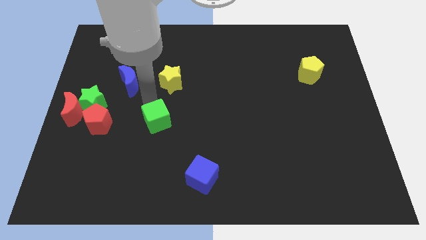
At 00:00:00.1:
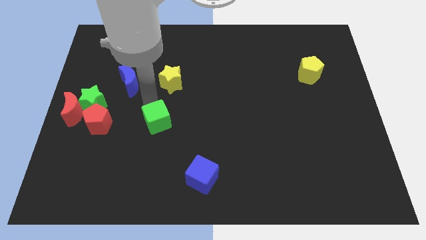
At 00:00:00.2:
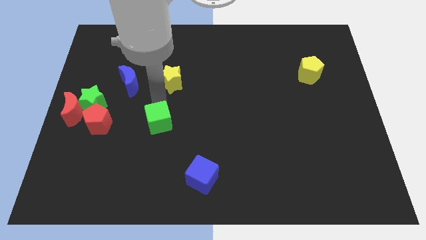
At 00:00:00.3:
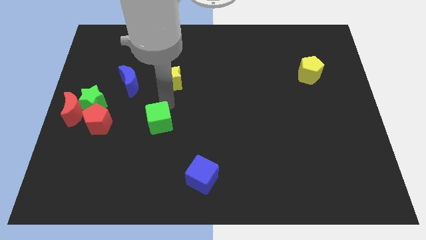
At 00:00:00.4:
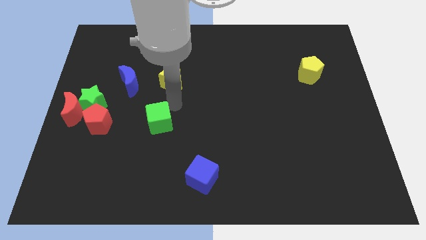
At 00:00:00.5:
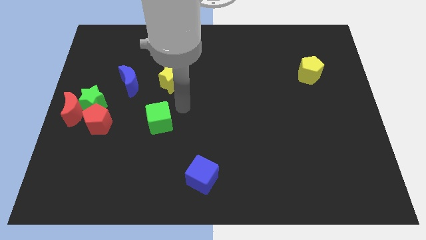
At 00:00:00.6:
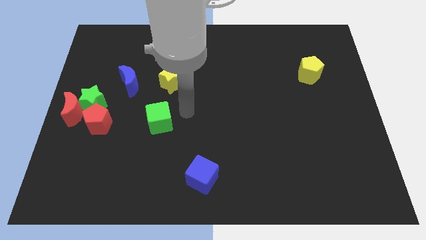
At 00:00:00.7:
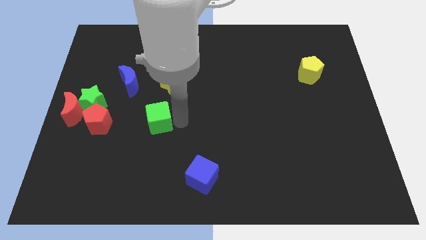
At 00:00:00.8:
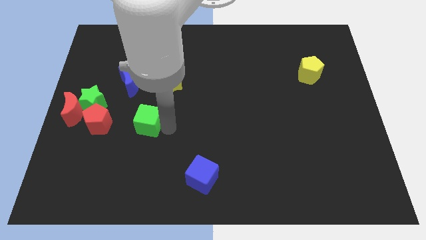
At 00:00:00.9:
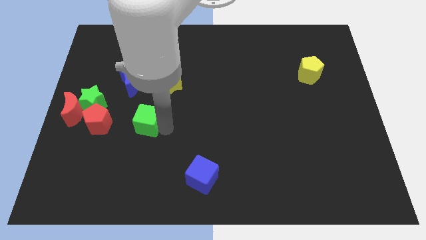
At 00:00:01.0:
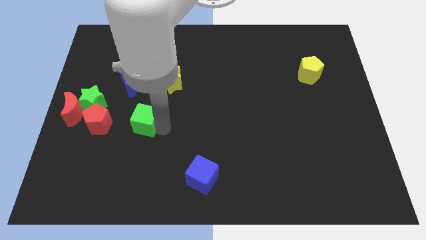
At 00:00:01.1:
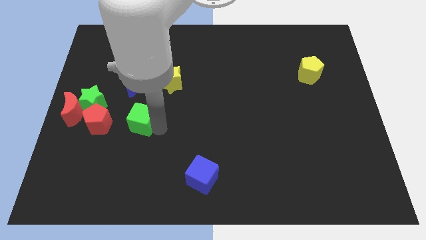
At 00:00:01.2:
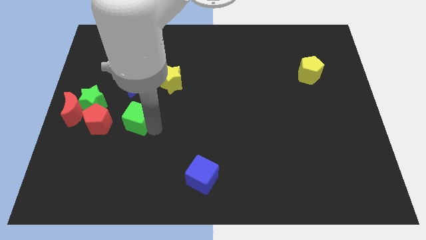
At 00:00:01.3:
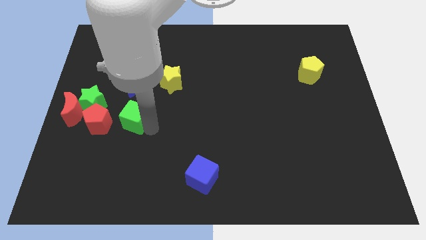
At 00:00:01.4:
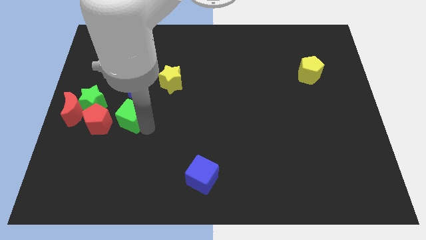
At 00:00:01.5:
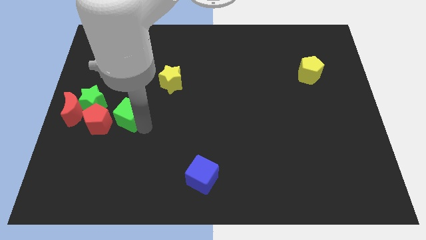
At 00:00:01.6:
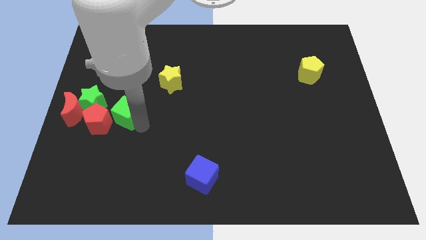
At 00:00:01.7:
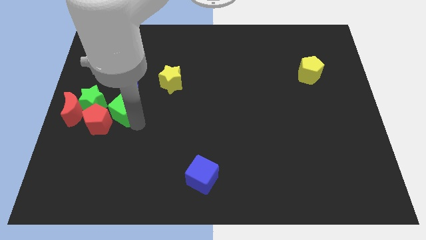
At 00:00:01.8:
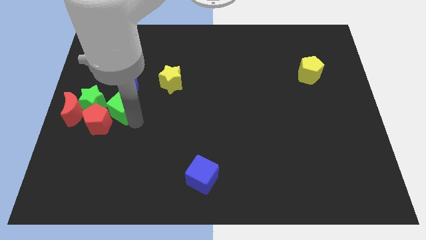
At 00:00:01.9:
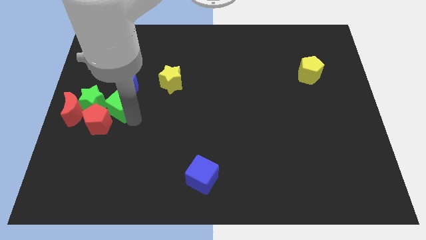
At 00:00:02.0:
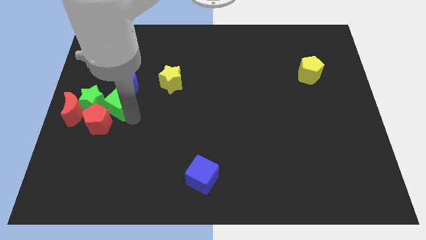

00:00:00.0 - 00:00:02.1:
place green cube to the right of green star

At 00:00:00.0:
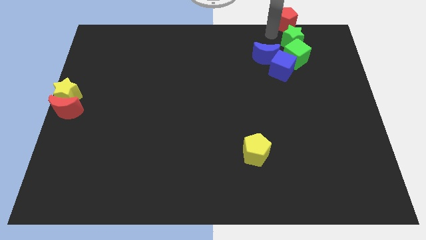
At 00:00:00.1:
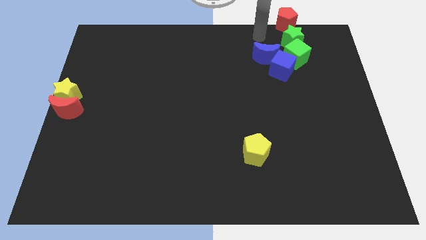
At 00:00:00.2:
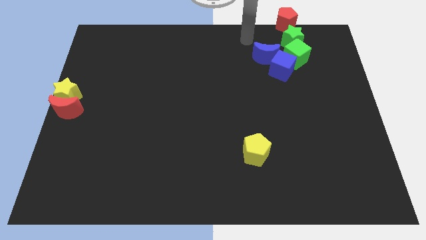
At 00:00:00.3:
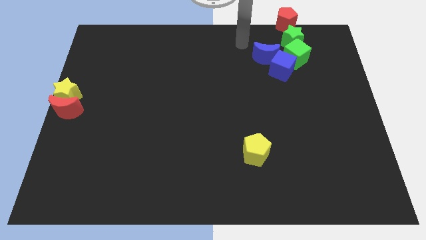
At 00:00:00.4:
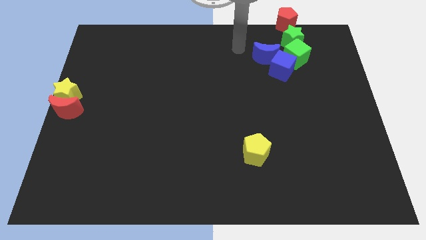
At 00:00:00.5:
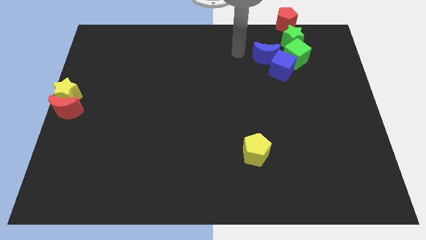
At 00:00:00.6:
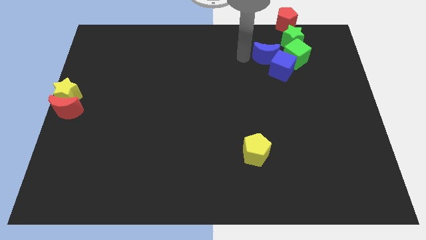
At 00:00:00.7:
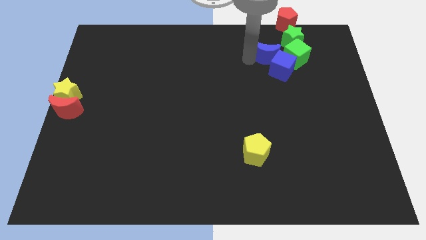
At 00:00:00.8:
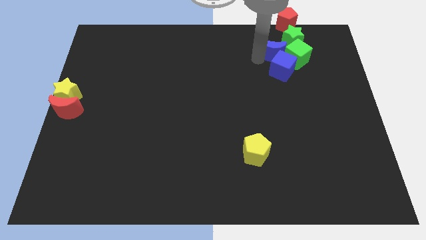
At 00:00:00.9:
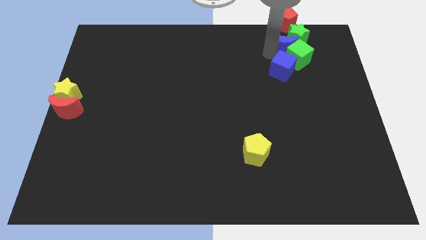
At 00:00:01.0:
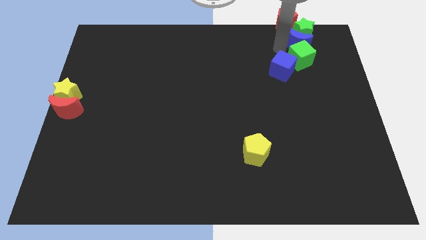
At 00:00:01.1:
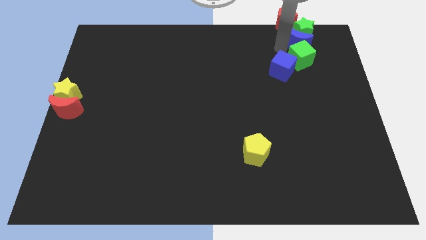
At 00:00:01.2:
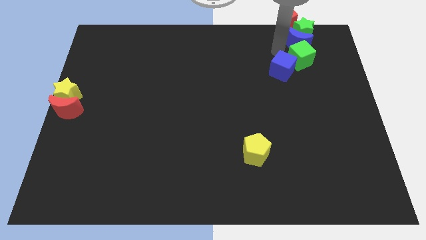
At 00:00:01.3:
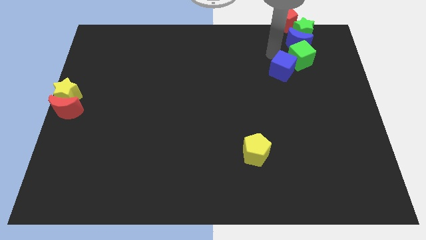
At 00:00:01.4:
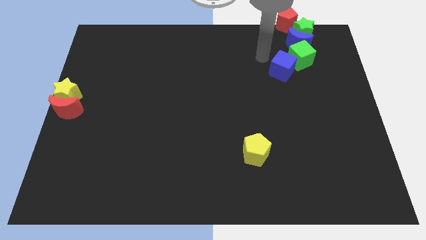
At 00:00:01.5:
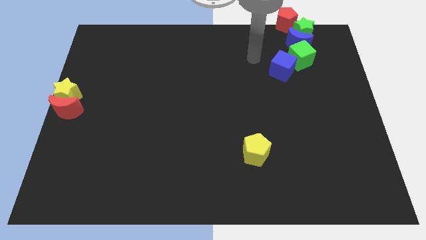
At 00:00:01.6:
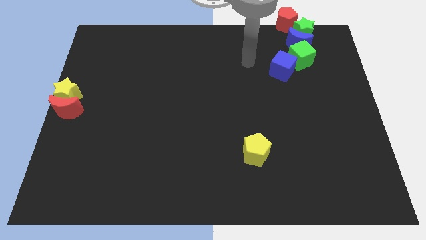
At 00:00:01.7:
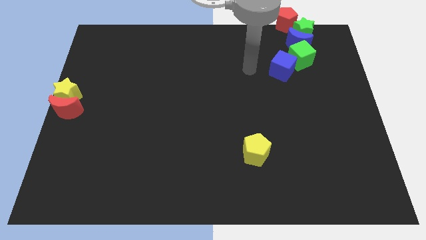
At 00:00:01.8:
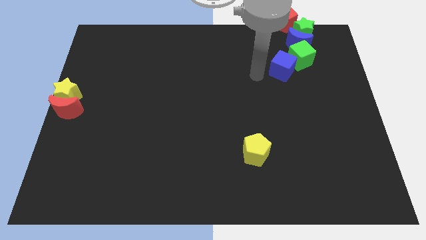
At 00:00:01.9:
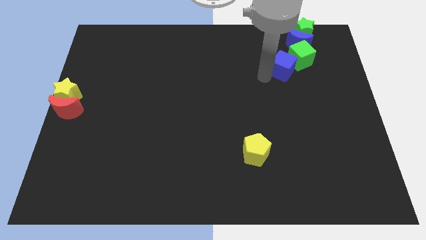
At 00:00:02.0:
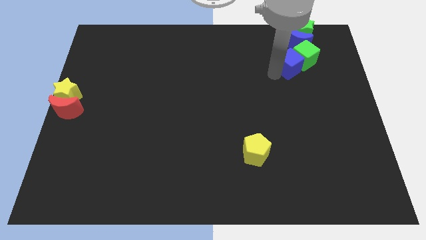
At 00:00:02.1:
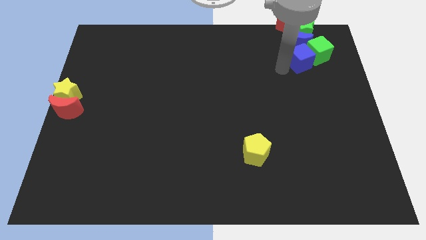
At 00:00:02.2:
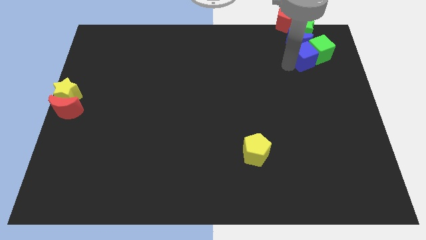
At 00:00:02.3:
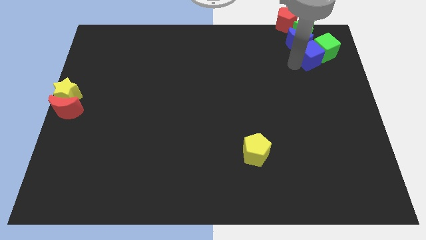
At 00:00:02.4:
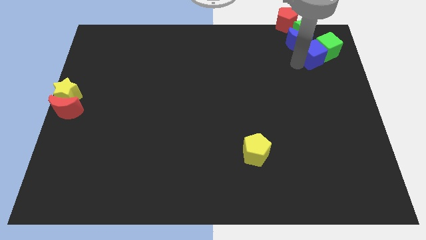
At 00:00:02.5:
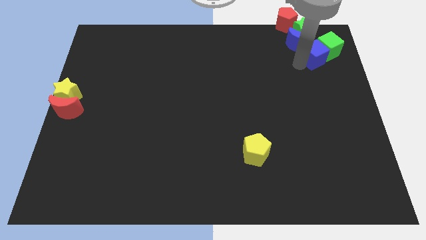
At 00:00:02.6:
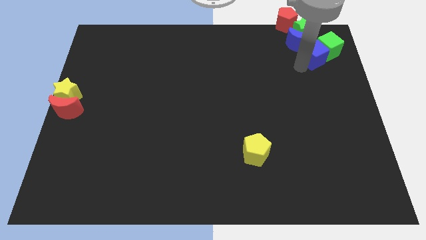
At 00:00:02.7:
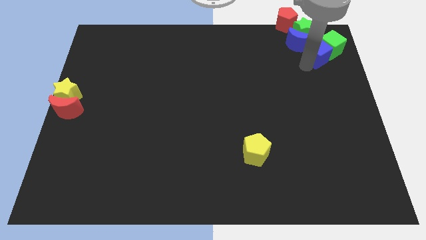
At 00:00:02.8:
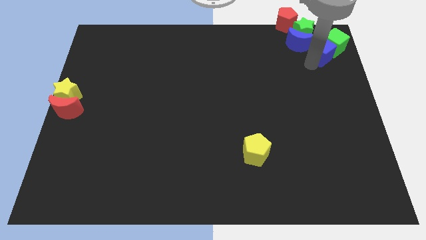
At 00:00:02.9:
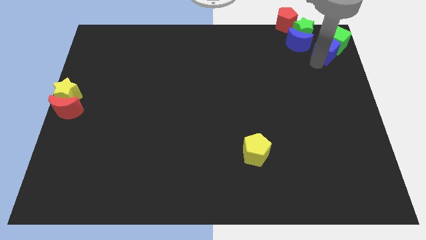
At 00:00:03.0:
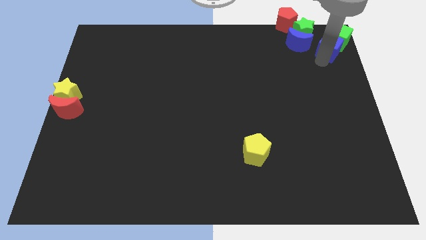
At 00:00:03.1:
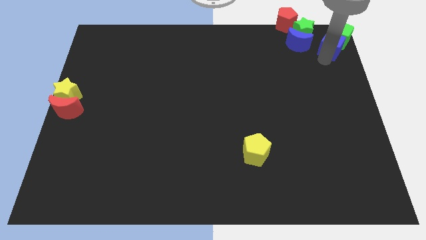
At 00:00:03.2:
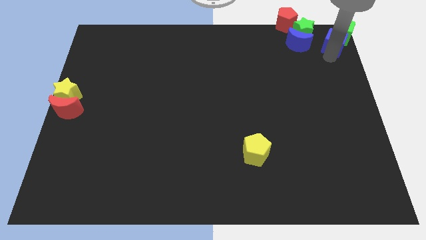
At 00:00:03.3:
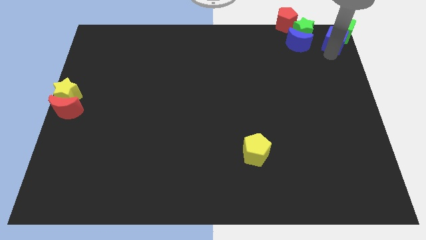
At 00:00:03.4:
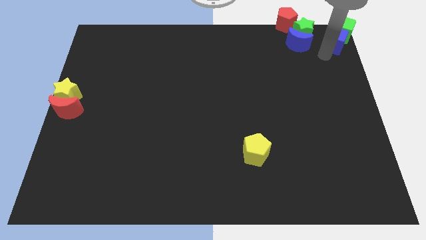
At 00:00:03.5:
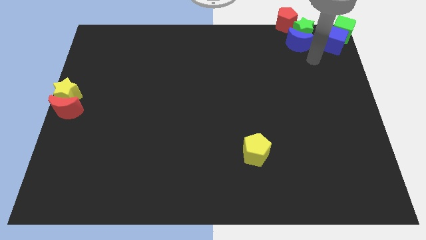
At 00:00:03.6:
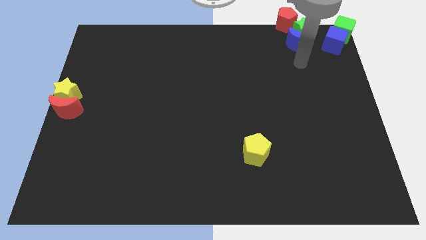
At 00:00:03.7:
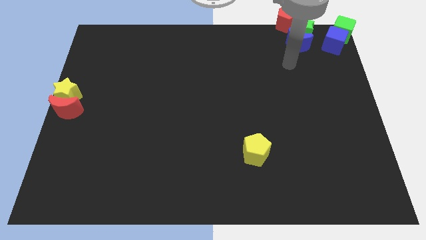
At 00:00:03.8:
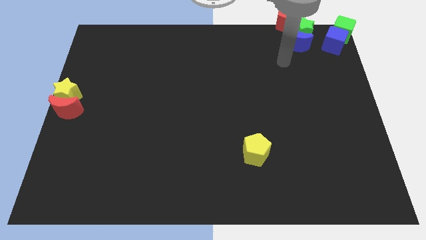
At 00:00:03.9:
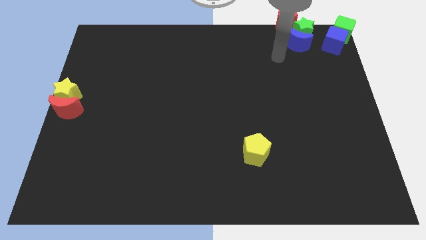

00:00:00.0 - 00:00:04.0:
push the blue crescent into the green star

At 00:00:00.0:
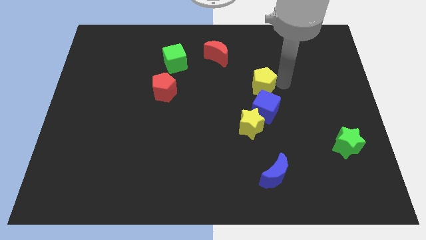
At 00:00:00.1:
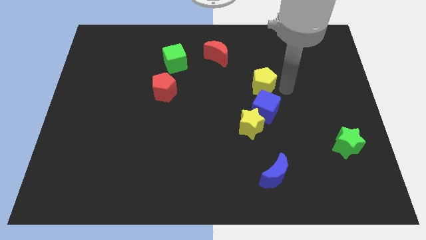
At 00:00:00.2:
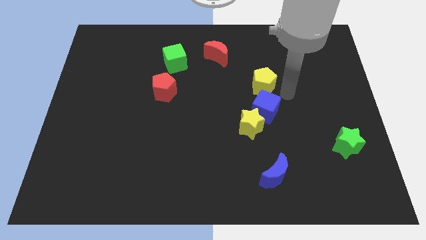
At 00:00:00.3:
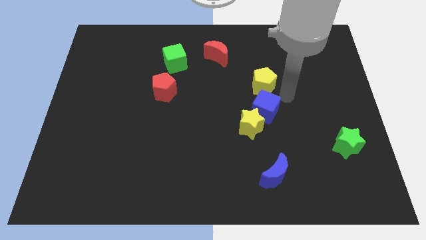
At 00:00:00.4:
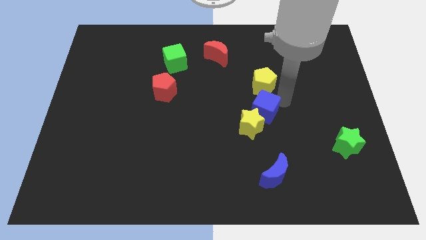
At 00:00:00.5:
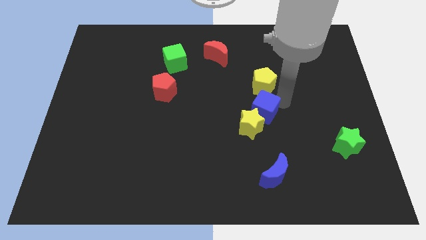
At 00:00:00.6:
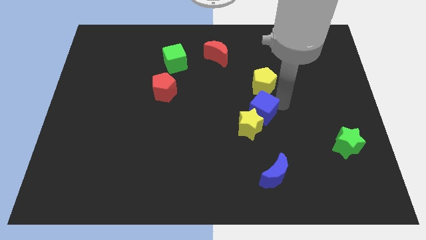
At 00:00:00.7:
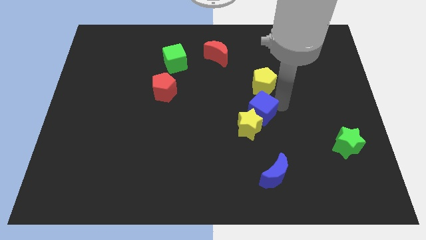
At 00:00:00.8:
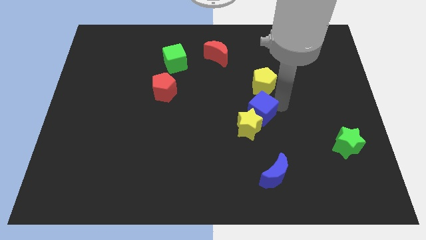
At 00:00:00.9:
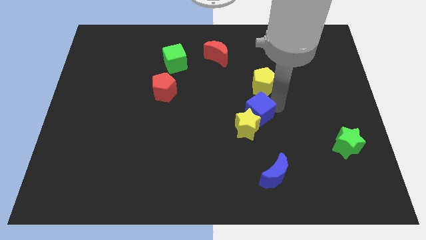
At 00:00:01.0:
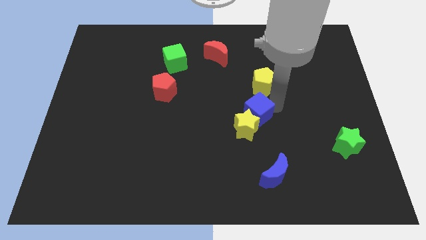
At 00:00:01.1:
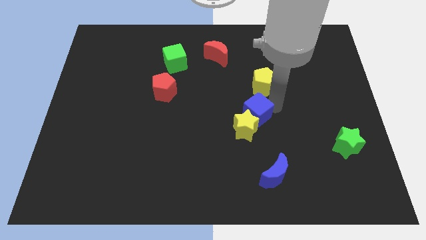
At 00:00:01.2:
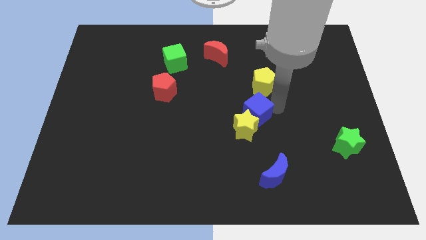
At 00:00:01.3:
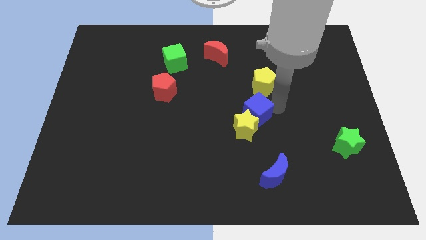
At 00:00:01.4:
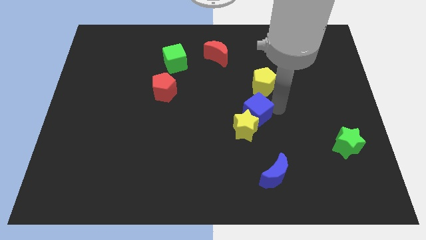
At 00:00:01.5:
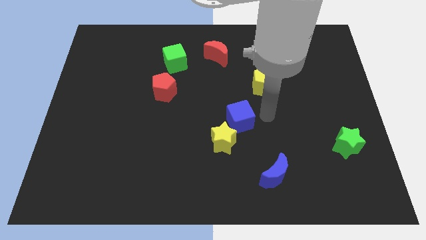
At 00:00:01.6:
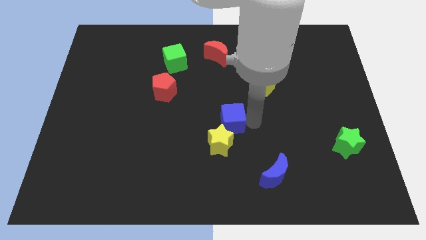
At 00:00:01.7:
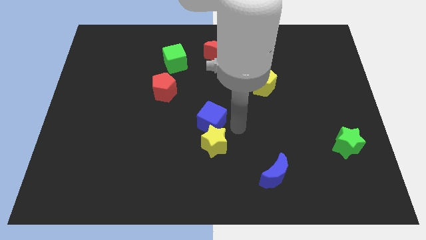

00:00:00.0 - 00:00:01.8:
push the blue cube to the center of the board

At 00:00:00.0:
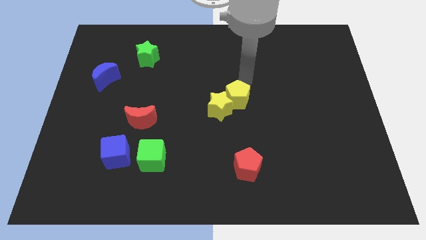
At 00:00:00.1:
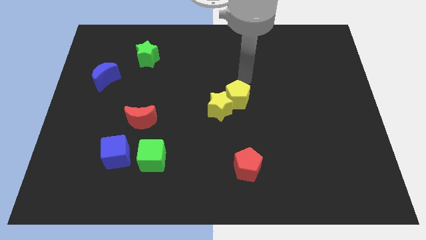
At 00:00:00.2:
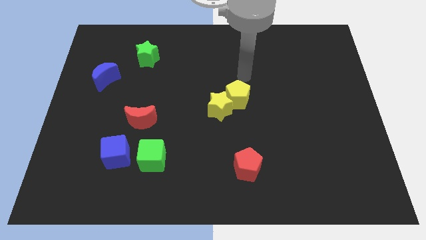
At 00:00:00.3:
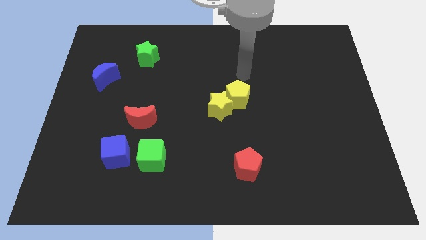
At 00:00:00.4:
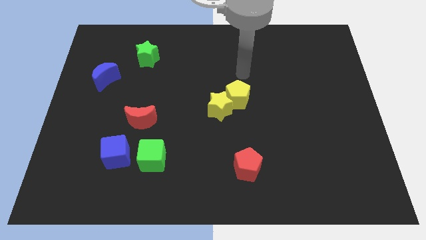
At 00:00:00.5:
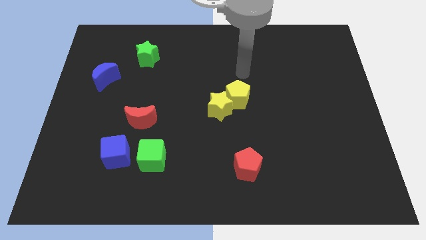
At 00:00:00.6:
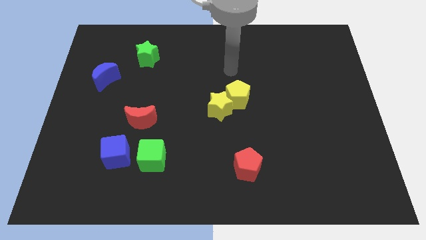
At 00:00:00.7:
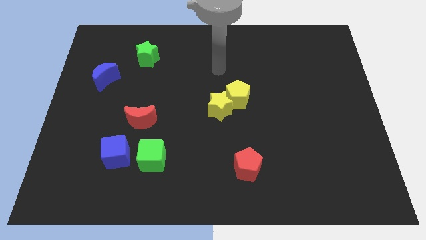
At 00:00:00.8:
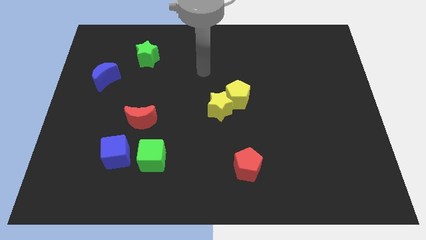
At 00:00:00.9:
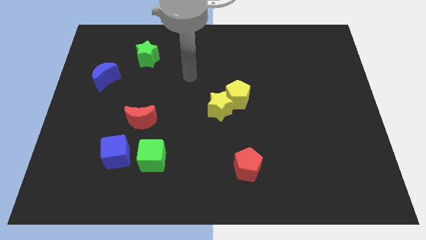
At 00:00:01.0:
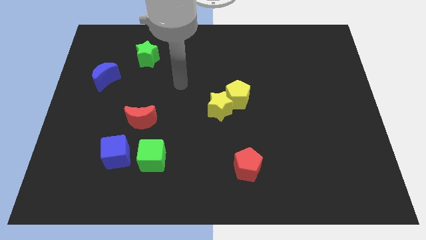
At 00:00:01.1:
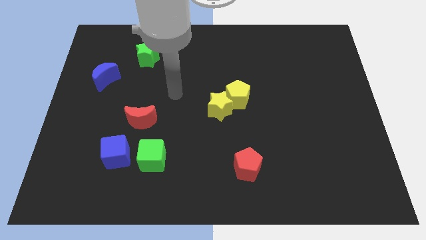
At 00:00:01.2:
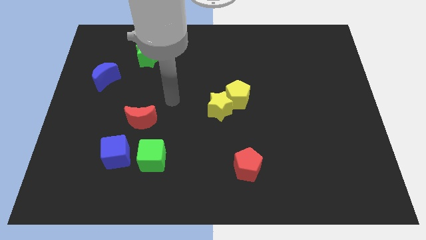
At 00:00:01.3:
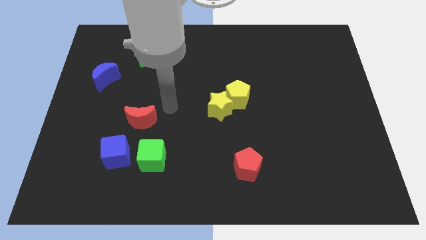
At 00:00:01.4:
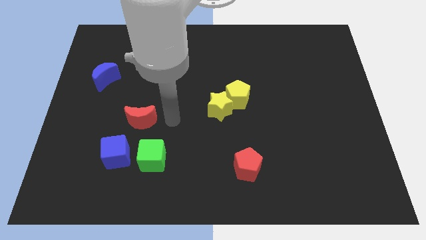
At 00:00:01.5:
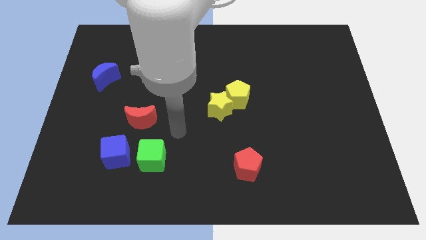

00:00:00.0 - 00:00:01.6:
move your hand away from the yellow blocks
